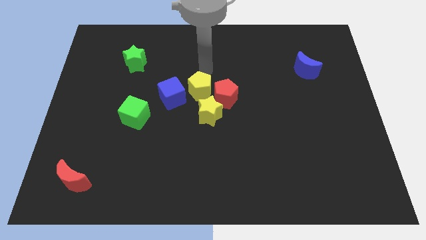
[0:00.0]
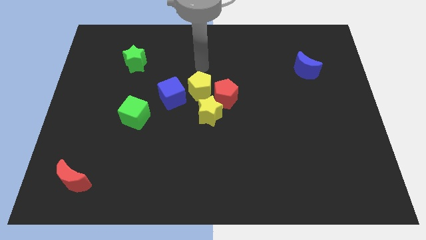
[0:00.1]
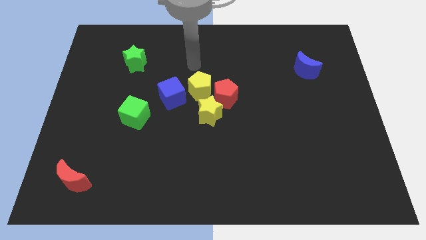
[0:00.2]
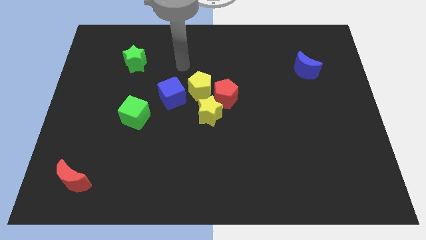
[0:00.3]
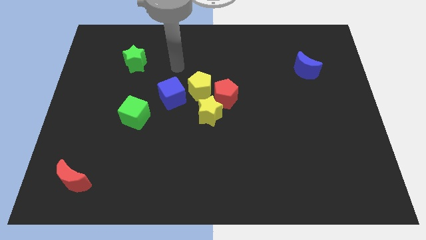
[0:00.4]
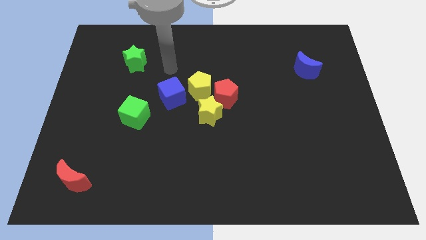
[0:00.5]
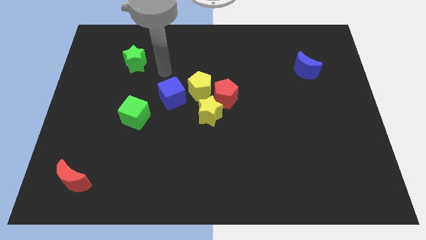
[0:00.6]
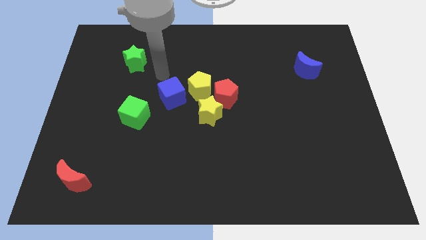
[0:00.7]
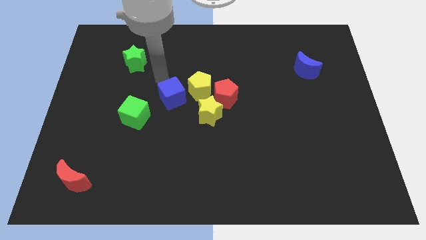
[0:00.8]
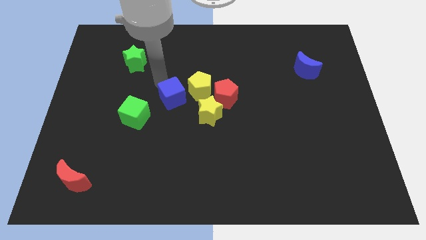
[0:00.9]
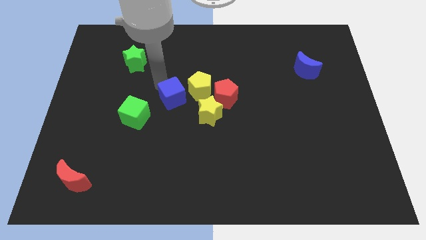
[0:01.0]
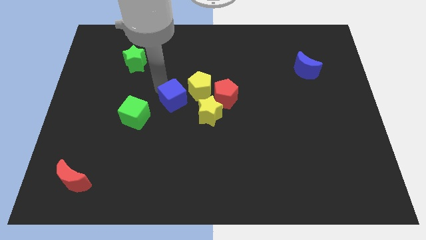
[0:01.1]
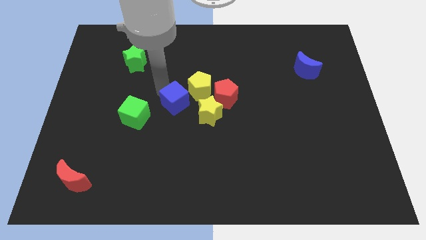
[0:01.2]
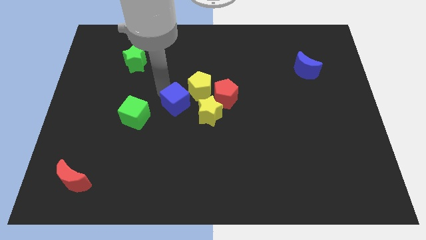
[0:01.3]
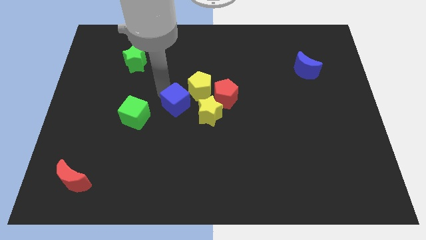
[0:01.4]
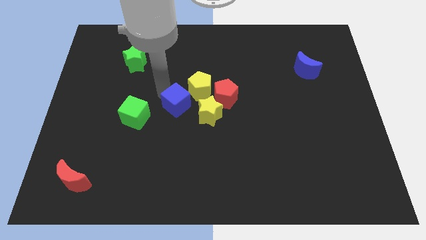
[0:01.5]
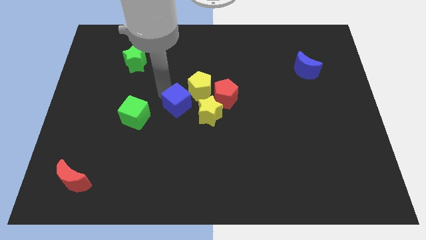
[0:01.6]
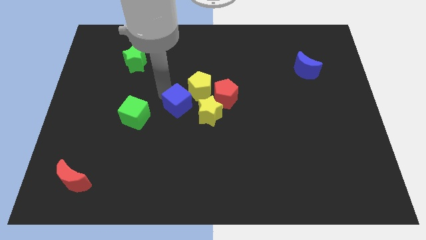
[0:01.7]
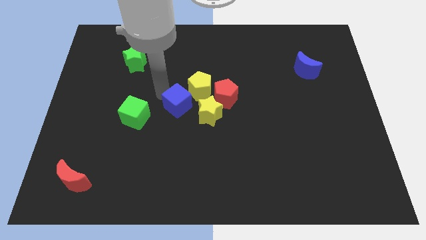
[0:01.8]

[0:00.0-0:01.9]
slightly move the blue cube closer to the yellow pentagon

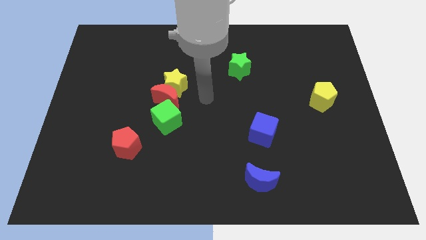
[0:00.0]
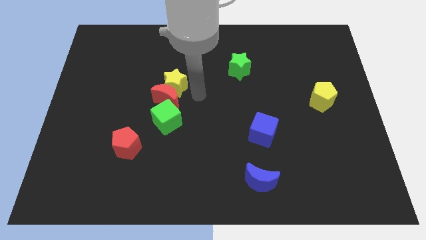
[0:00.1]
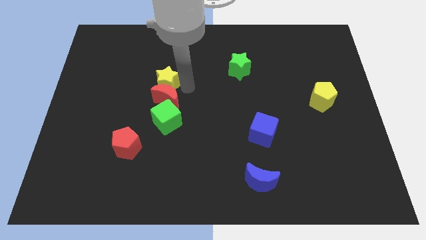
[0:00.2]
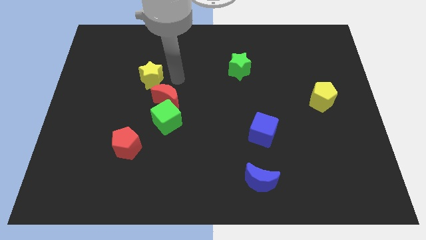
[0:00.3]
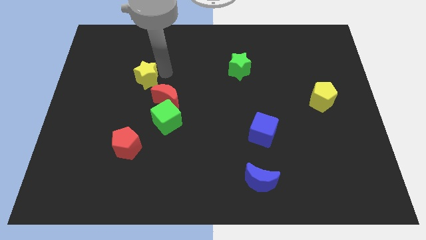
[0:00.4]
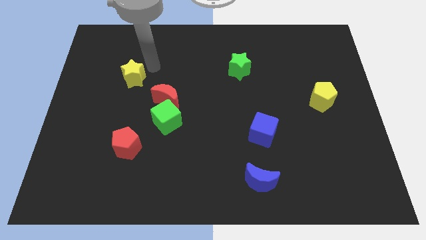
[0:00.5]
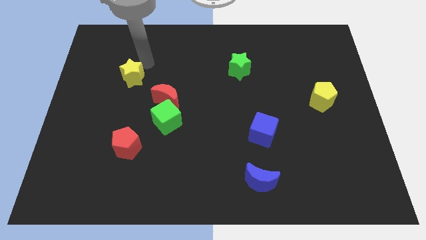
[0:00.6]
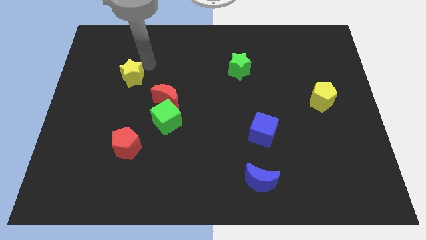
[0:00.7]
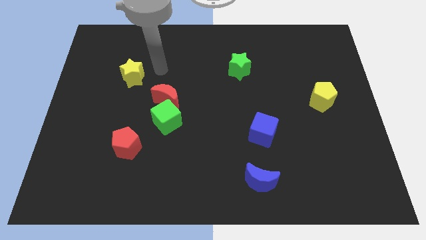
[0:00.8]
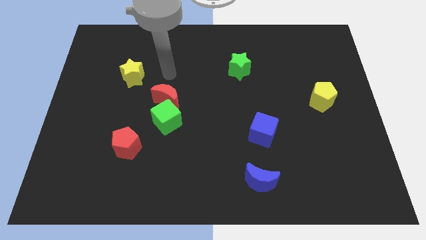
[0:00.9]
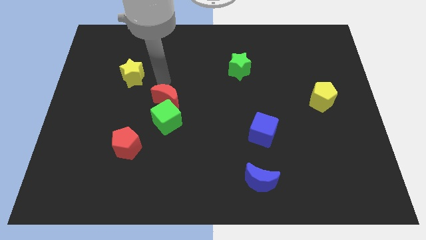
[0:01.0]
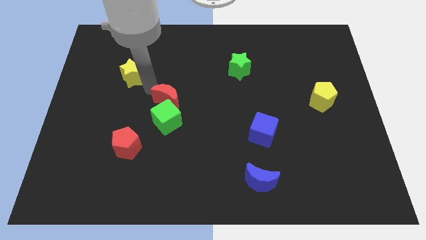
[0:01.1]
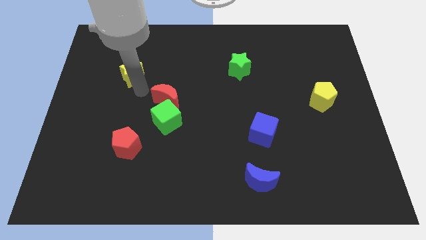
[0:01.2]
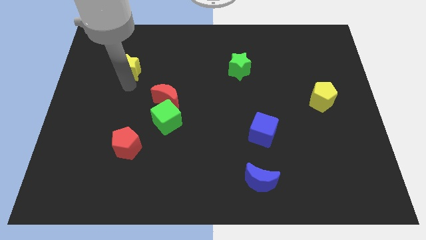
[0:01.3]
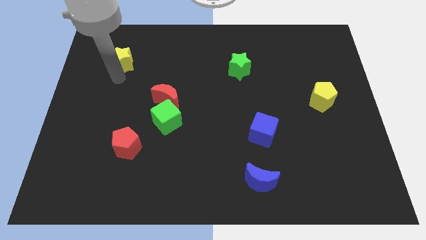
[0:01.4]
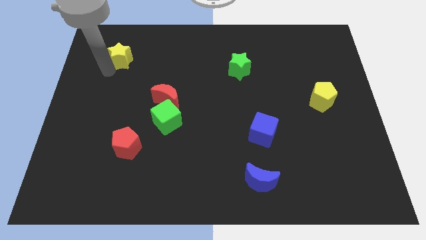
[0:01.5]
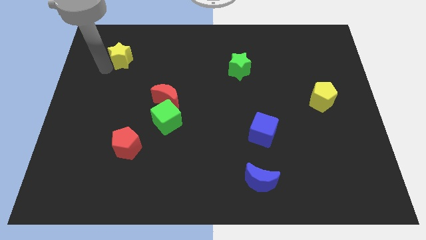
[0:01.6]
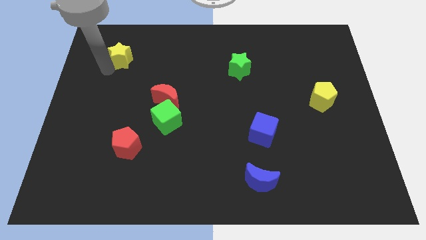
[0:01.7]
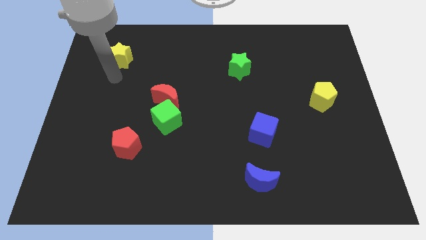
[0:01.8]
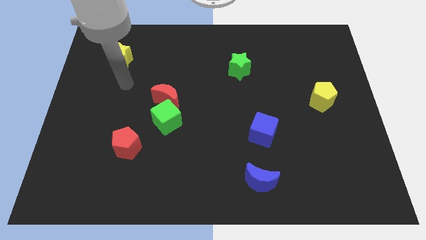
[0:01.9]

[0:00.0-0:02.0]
move the yellow star towards the top left corner

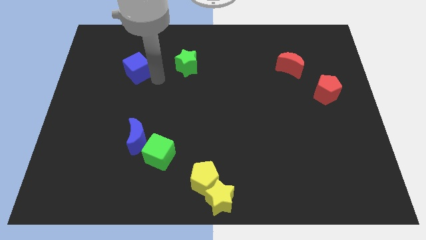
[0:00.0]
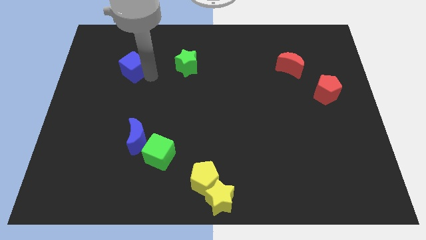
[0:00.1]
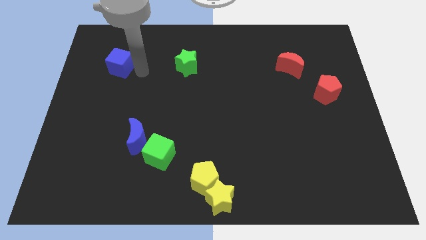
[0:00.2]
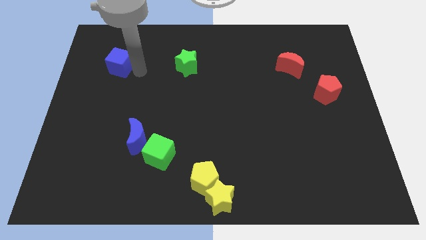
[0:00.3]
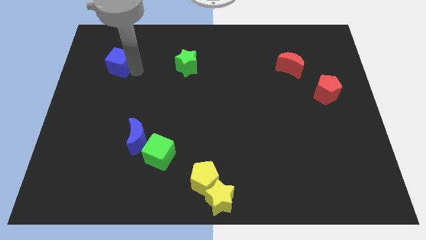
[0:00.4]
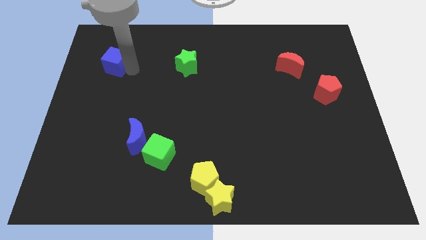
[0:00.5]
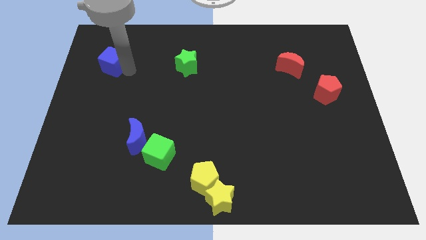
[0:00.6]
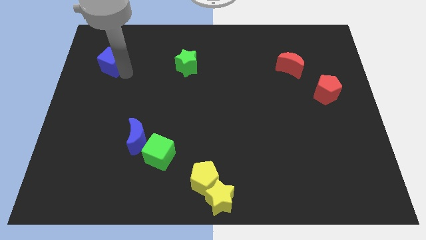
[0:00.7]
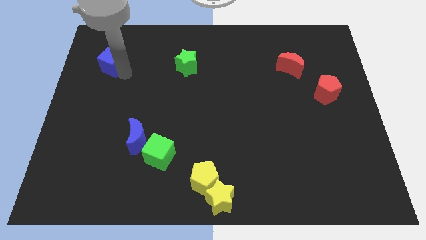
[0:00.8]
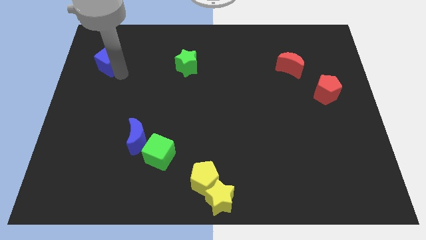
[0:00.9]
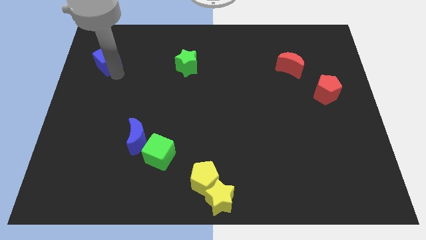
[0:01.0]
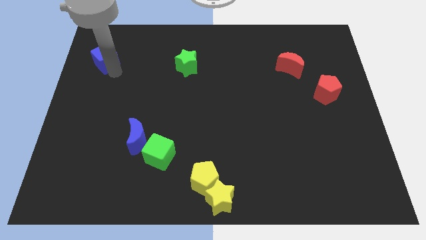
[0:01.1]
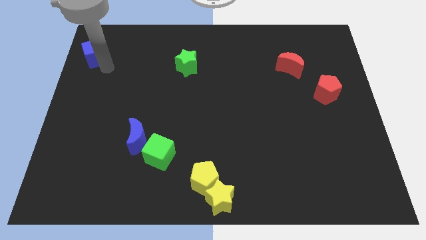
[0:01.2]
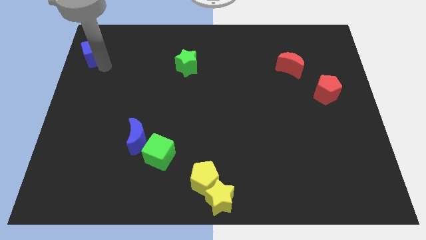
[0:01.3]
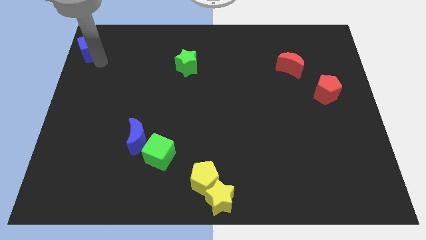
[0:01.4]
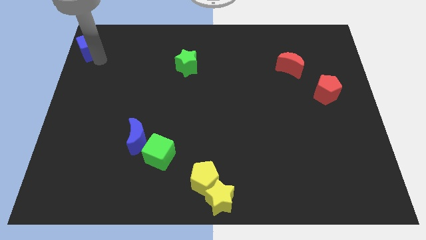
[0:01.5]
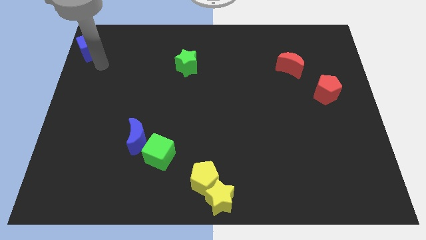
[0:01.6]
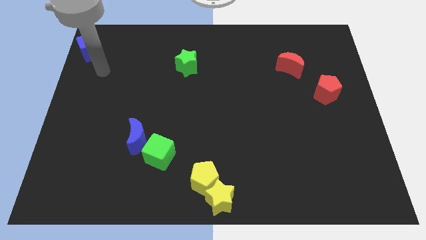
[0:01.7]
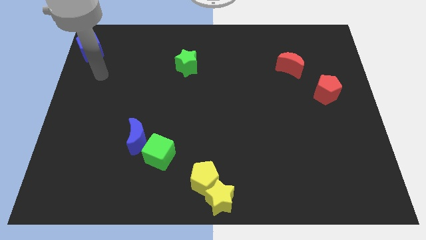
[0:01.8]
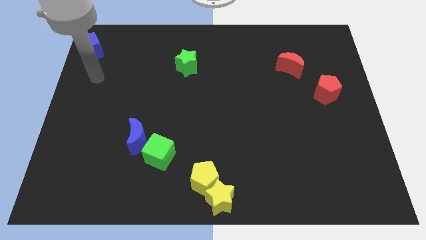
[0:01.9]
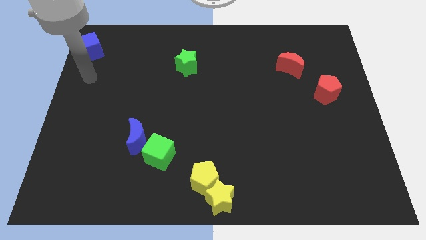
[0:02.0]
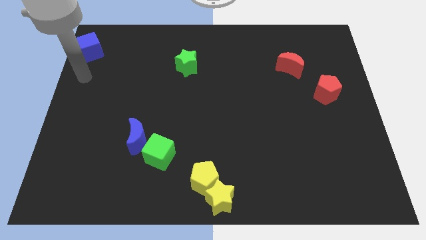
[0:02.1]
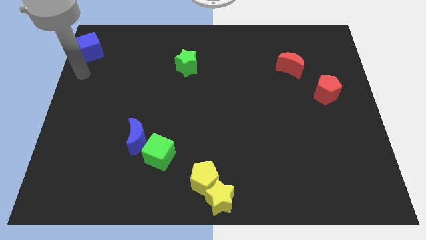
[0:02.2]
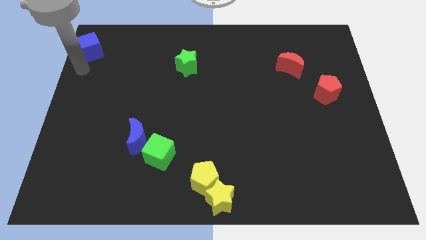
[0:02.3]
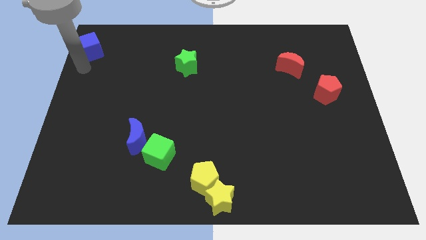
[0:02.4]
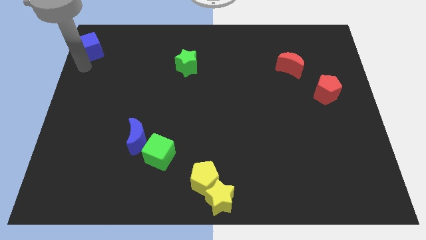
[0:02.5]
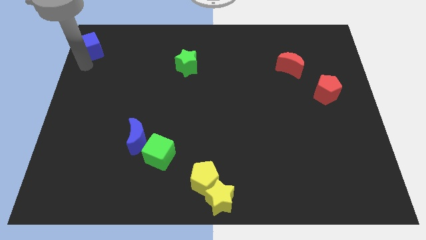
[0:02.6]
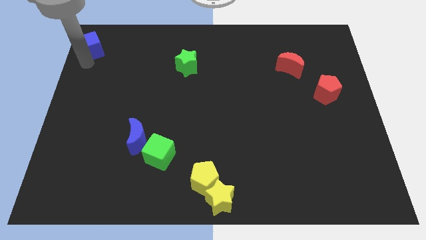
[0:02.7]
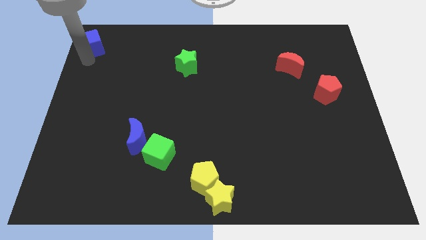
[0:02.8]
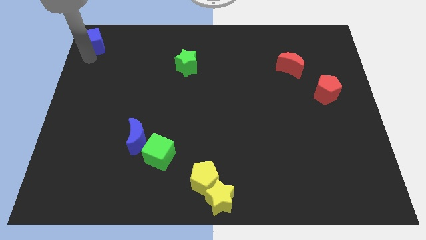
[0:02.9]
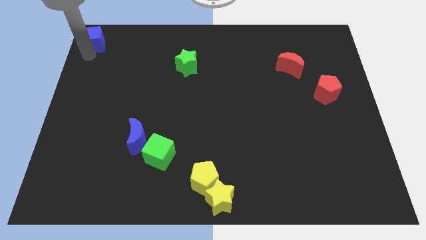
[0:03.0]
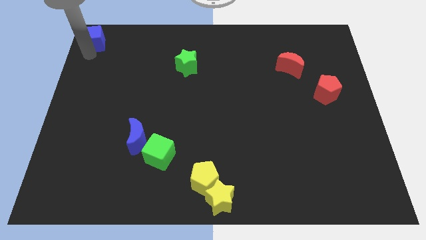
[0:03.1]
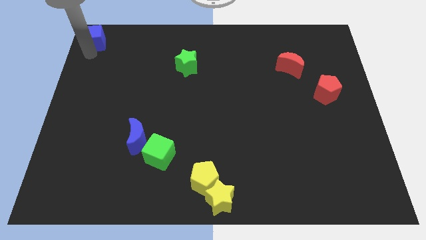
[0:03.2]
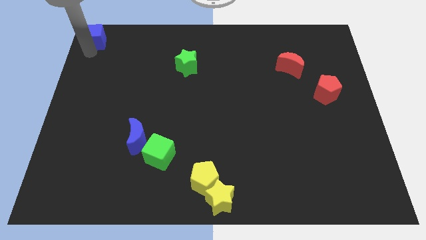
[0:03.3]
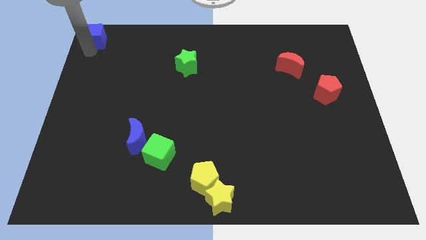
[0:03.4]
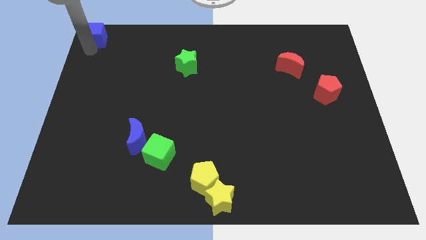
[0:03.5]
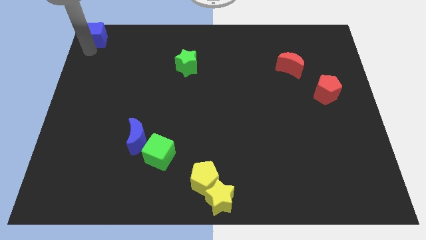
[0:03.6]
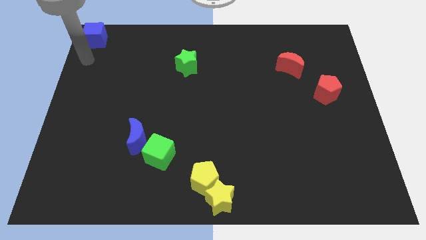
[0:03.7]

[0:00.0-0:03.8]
place the blue cube to the top left of the board

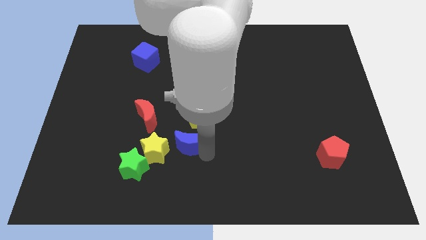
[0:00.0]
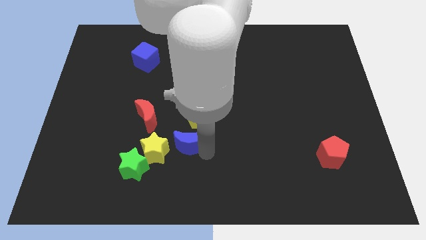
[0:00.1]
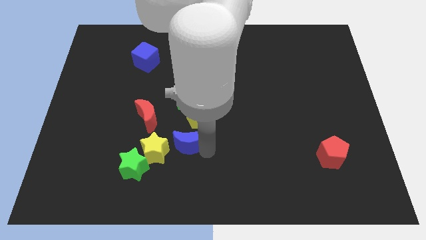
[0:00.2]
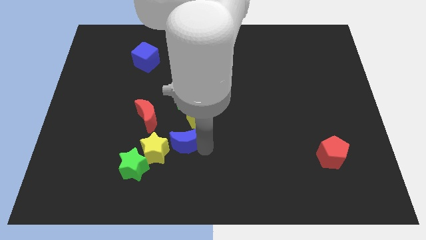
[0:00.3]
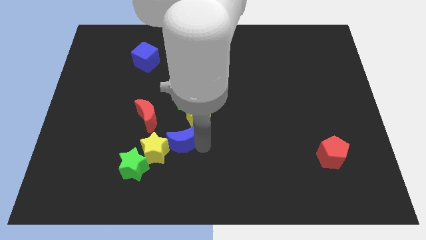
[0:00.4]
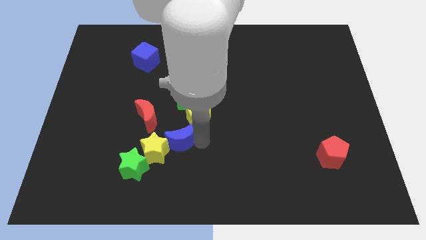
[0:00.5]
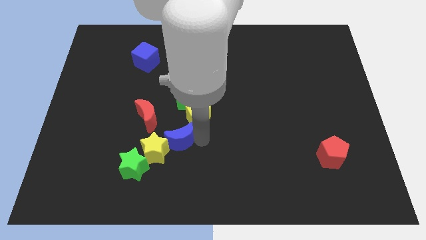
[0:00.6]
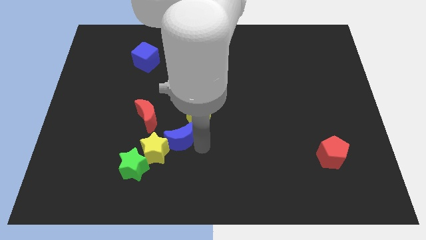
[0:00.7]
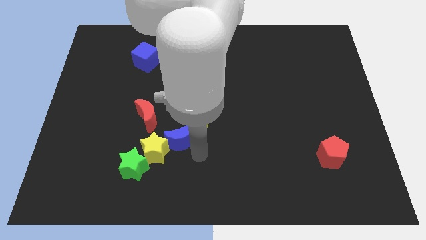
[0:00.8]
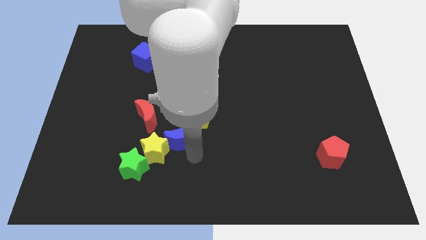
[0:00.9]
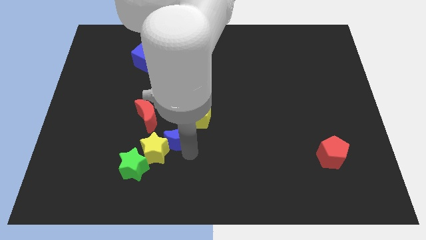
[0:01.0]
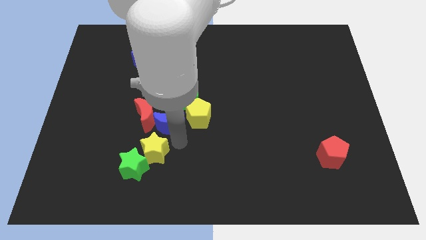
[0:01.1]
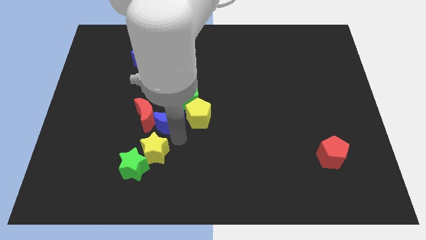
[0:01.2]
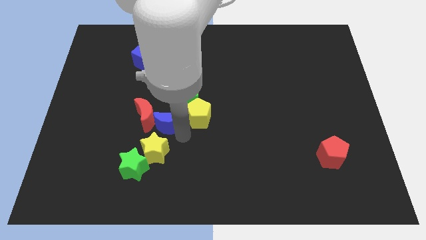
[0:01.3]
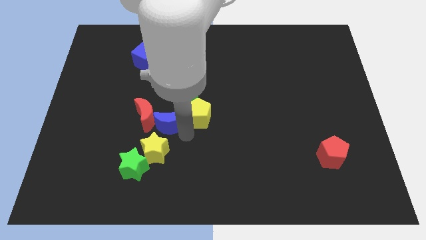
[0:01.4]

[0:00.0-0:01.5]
make the blue crescent to touch the right side of the red crescent
